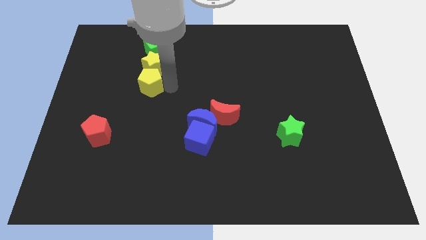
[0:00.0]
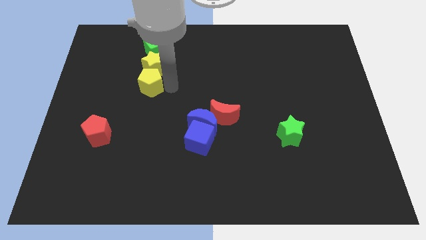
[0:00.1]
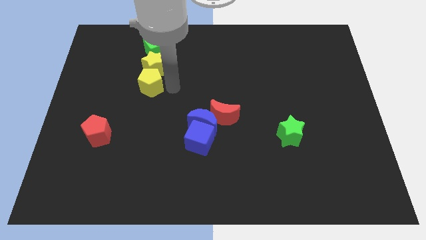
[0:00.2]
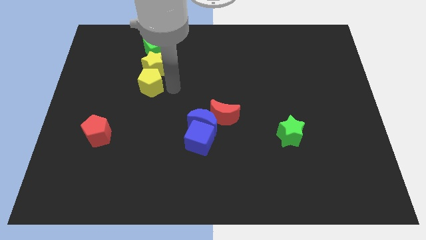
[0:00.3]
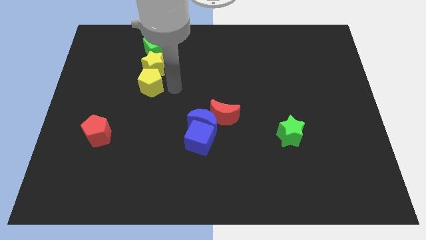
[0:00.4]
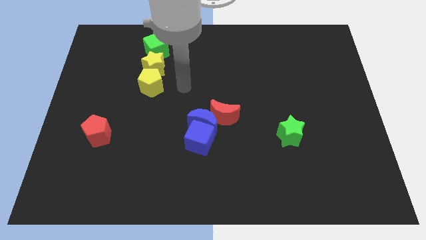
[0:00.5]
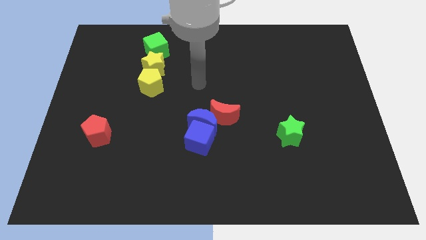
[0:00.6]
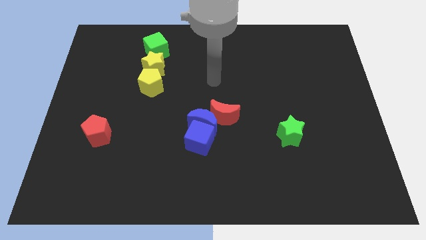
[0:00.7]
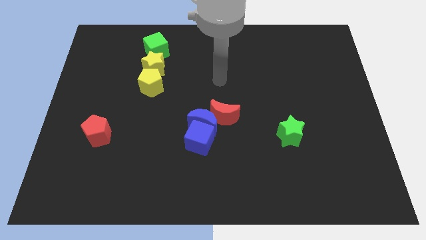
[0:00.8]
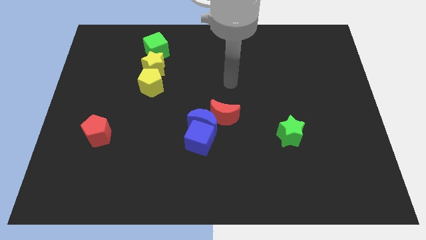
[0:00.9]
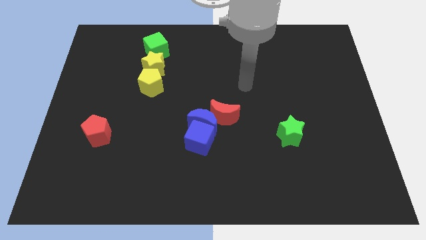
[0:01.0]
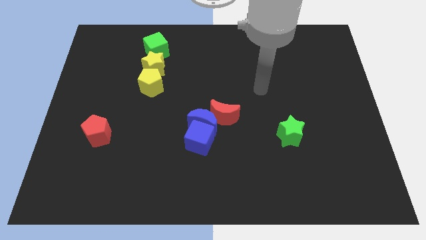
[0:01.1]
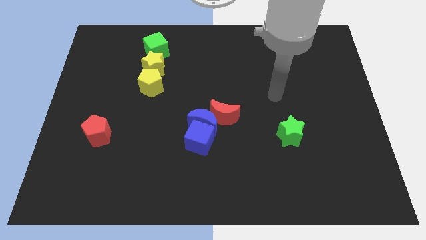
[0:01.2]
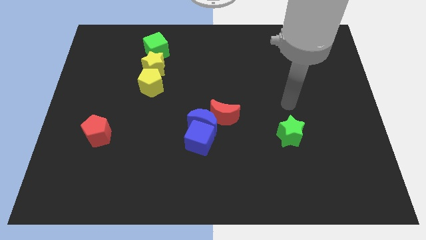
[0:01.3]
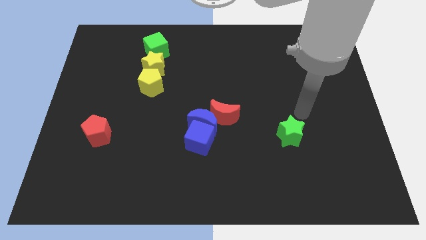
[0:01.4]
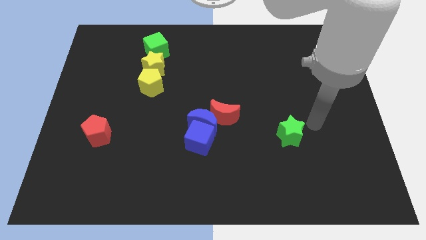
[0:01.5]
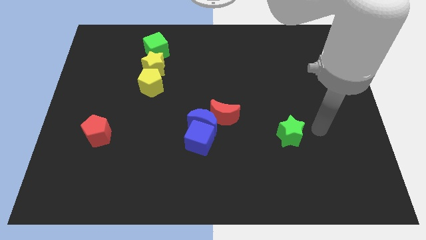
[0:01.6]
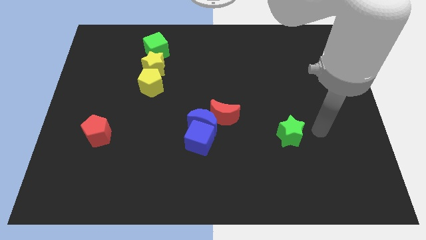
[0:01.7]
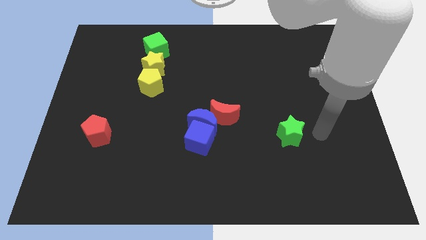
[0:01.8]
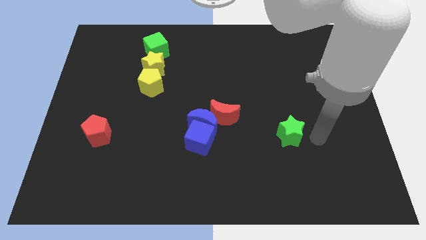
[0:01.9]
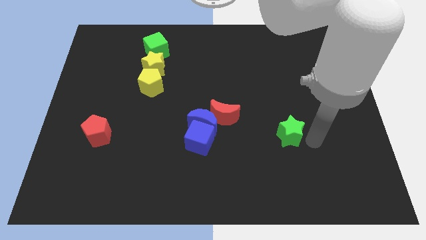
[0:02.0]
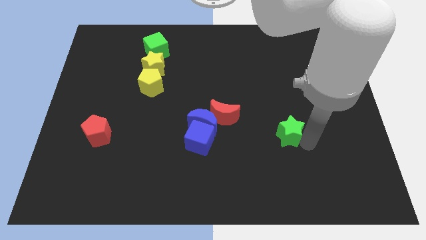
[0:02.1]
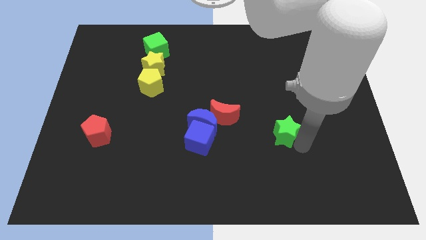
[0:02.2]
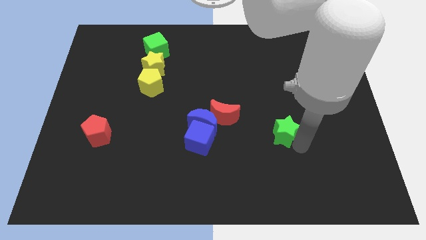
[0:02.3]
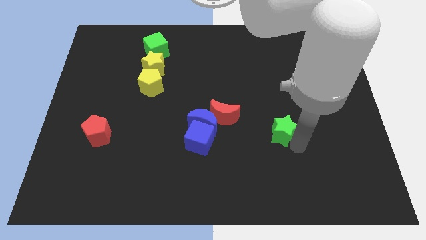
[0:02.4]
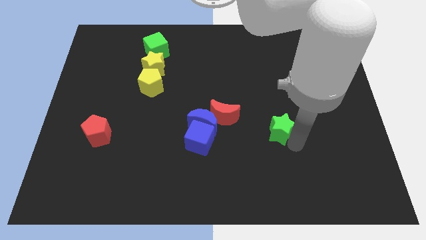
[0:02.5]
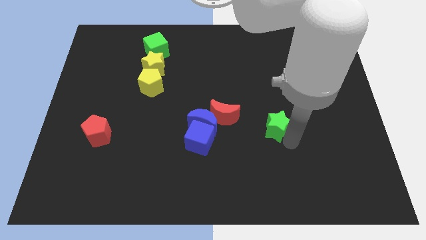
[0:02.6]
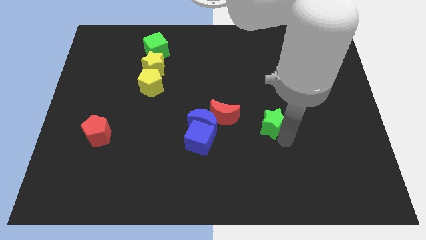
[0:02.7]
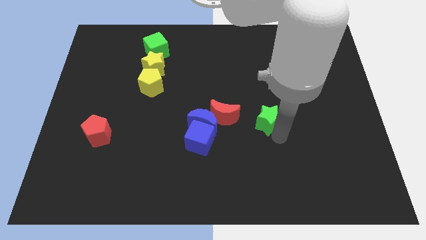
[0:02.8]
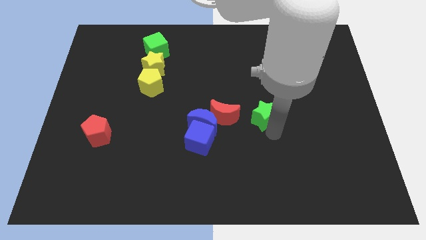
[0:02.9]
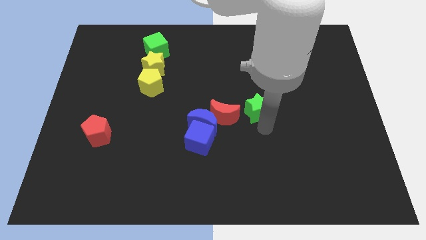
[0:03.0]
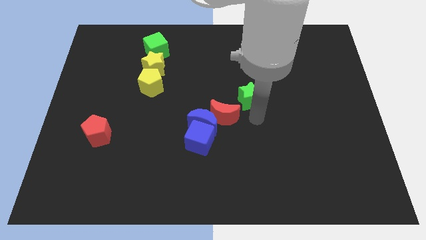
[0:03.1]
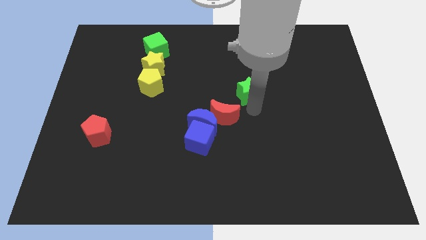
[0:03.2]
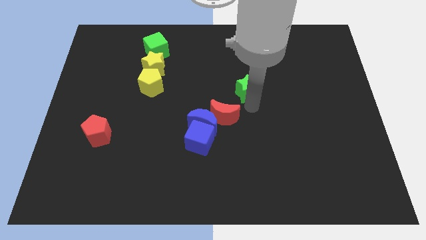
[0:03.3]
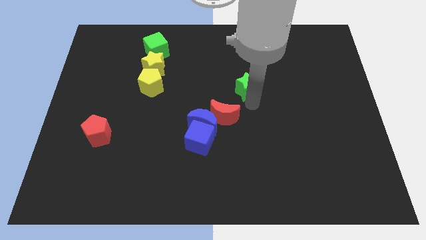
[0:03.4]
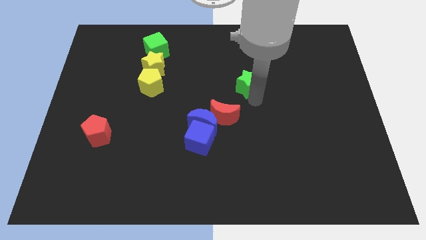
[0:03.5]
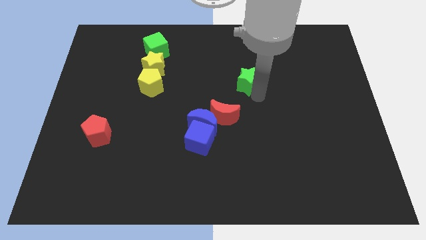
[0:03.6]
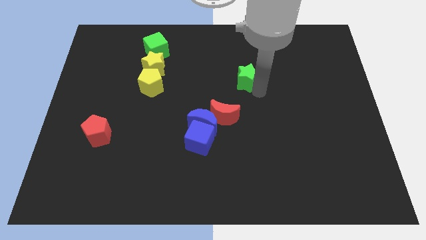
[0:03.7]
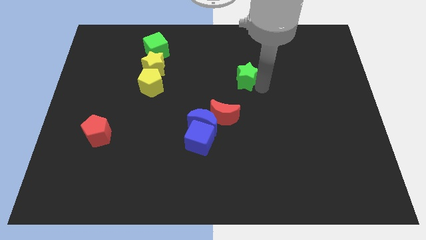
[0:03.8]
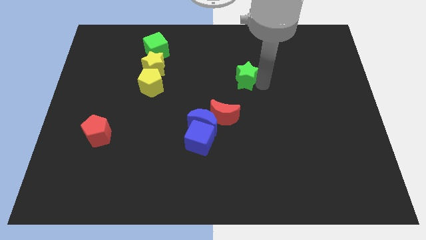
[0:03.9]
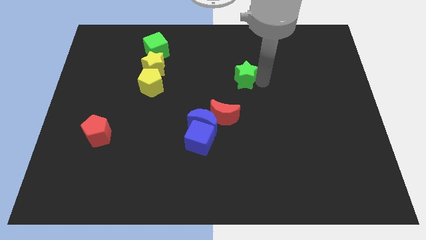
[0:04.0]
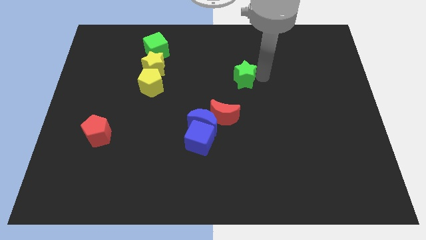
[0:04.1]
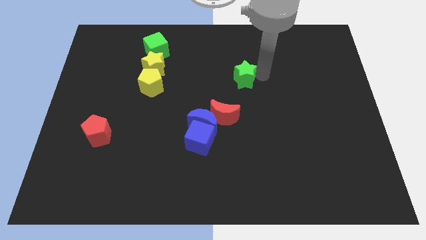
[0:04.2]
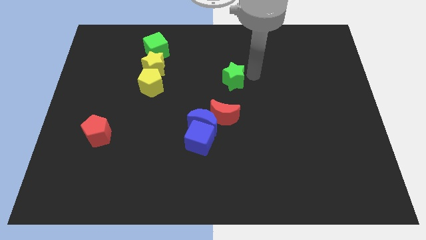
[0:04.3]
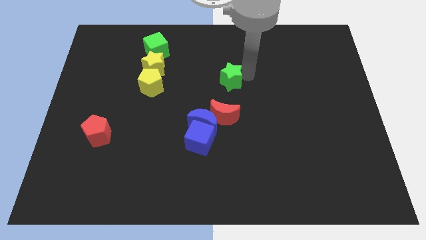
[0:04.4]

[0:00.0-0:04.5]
move the green star to the top side of the red moon

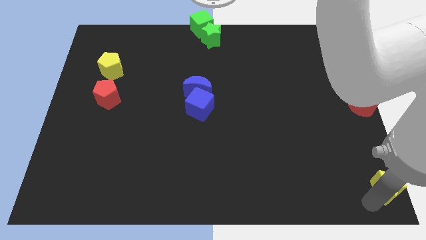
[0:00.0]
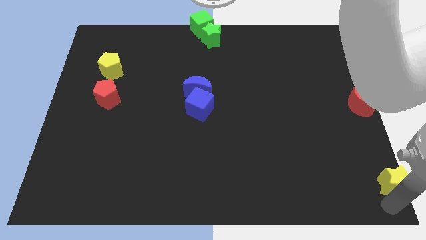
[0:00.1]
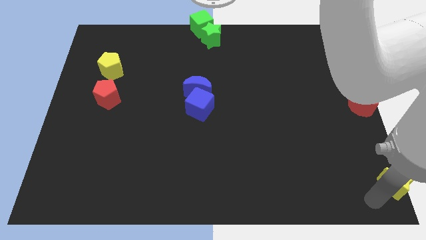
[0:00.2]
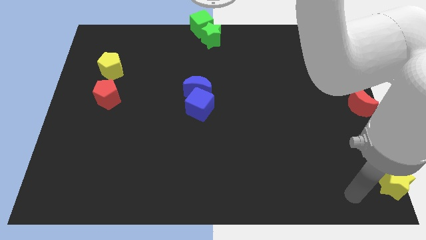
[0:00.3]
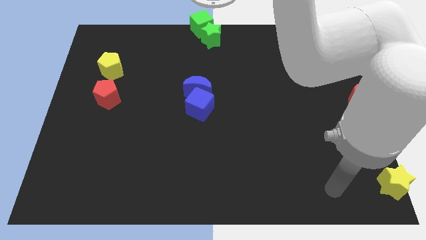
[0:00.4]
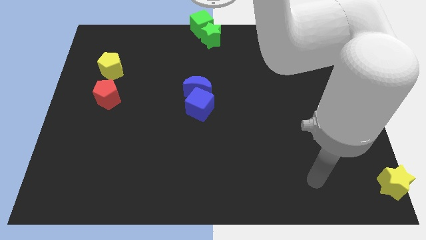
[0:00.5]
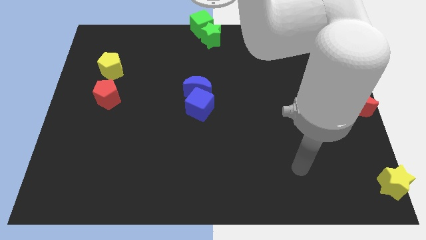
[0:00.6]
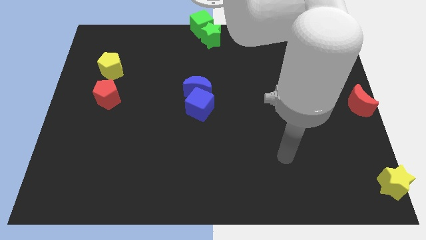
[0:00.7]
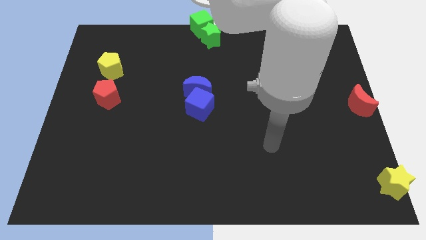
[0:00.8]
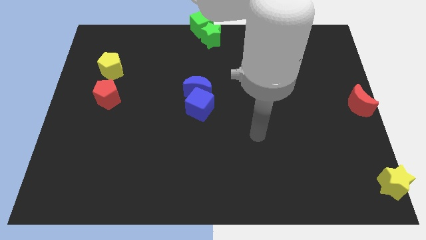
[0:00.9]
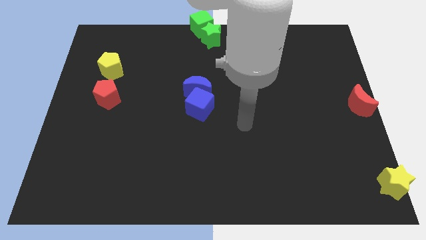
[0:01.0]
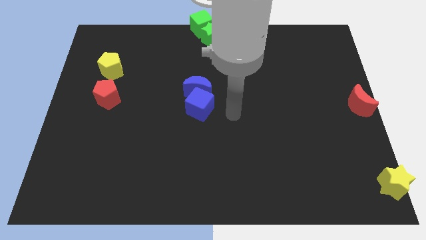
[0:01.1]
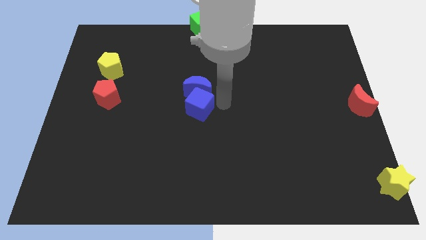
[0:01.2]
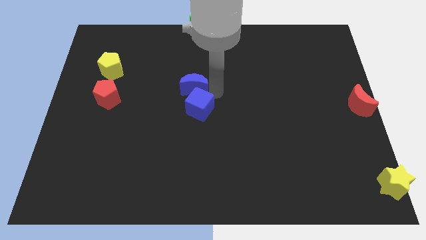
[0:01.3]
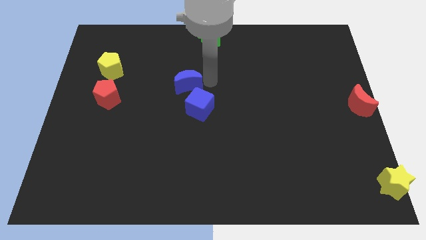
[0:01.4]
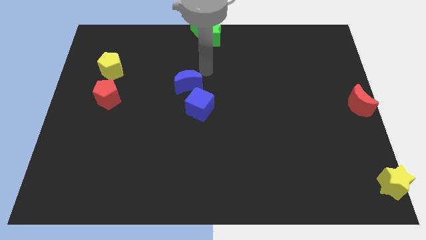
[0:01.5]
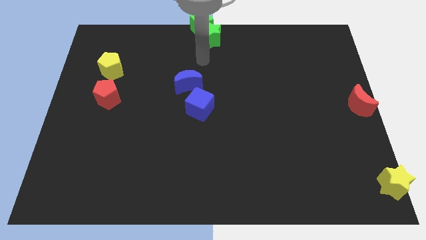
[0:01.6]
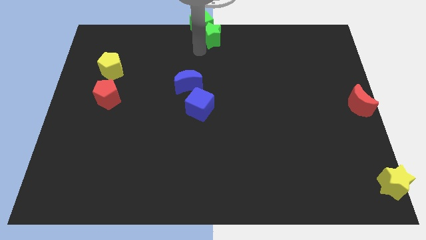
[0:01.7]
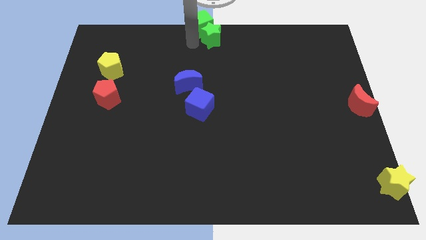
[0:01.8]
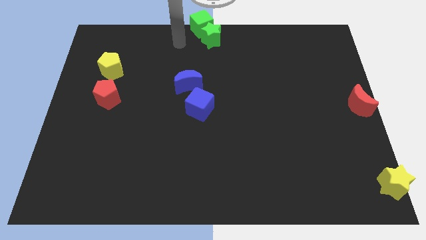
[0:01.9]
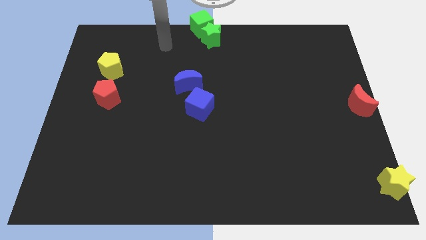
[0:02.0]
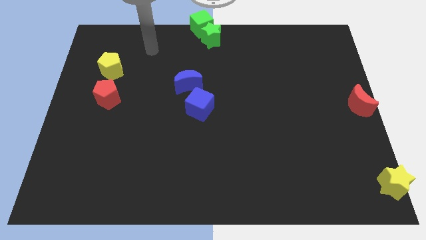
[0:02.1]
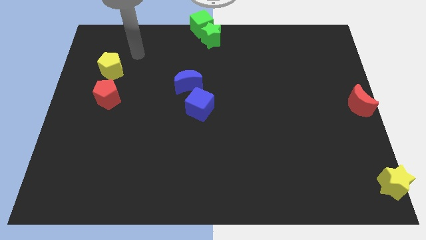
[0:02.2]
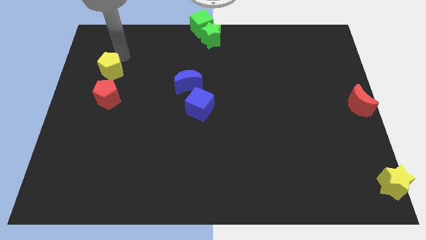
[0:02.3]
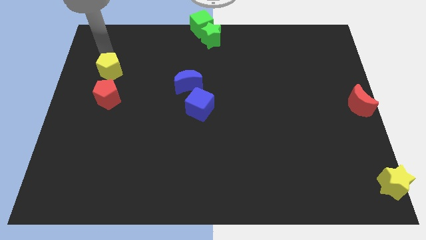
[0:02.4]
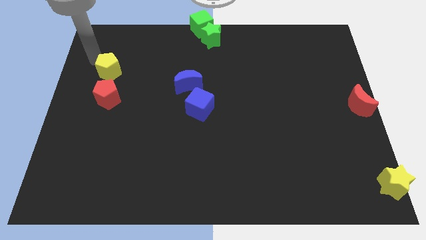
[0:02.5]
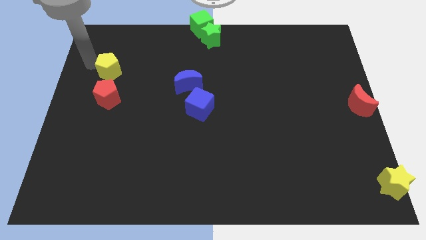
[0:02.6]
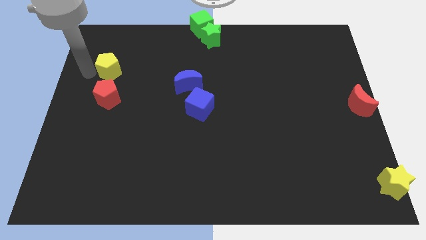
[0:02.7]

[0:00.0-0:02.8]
place the arm left of the yellow pentagon

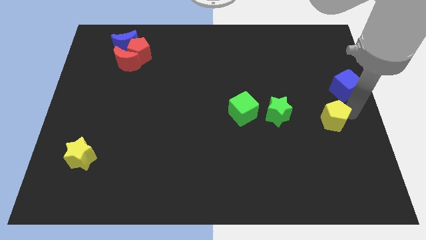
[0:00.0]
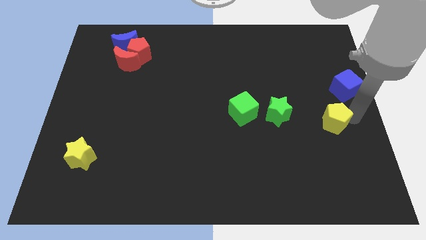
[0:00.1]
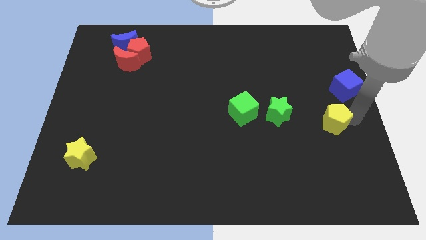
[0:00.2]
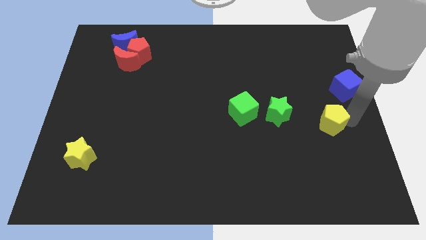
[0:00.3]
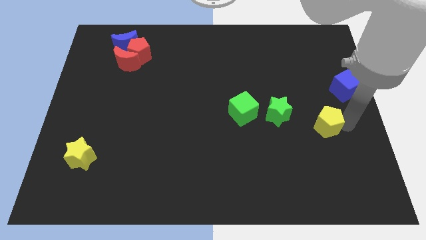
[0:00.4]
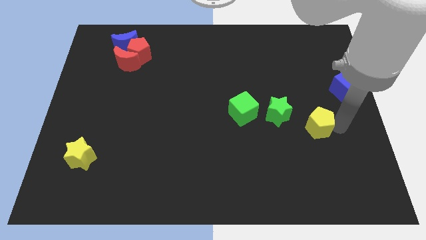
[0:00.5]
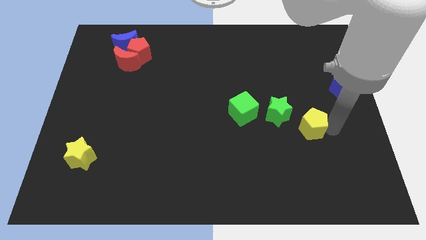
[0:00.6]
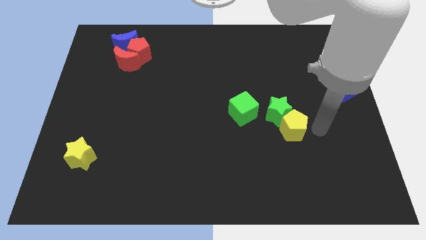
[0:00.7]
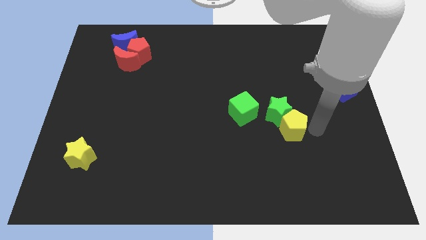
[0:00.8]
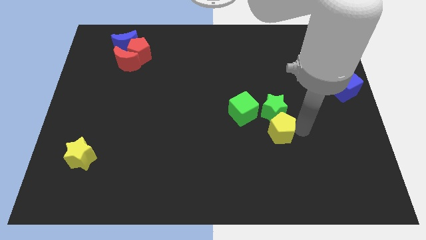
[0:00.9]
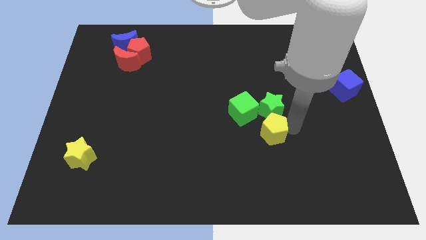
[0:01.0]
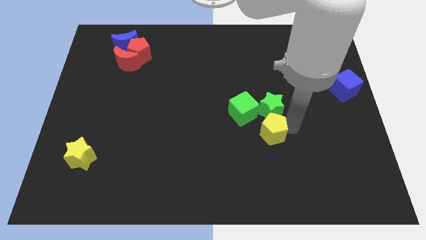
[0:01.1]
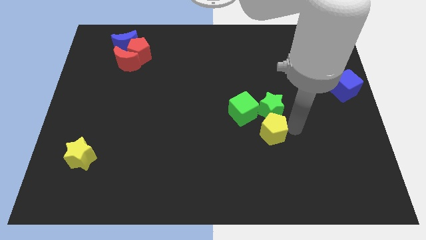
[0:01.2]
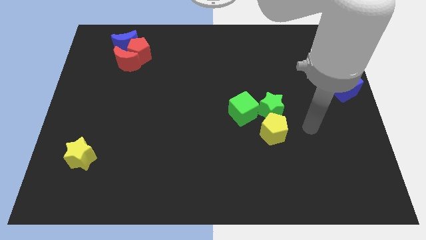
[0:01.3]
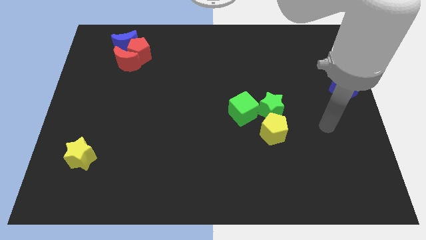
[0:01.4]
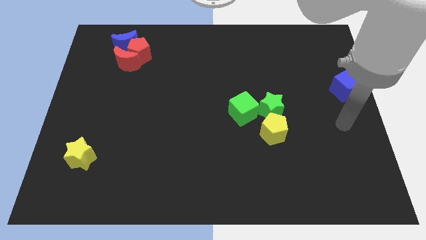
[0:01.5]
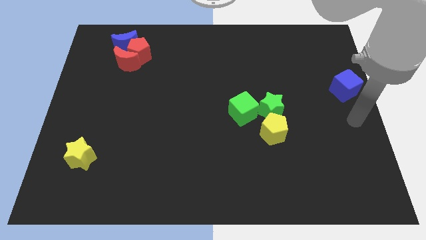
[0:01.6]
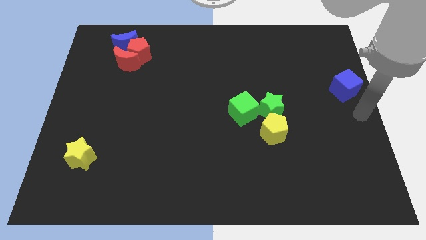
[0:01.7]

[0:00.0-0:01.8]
push the yellow pentagon below to the green star
